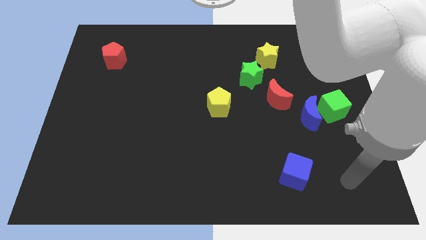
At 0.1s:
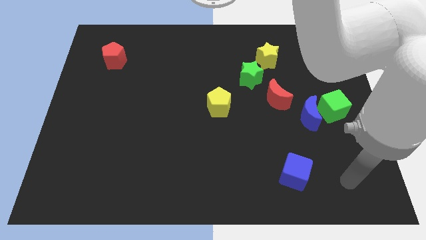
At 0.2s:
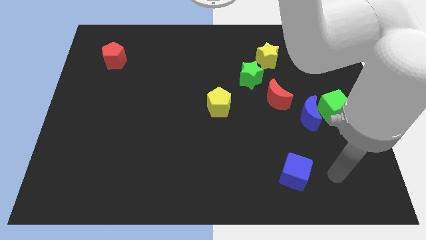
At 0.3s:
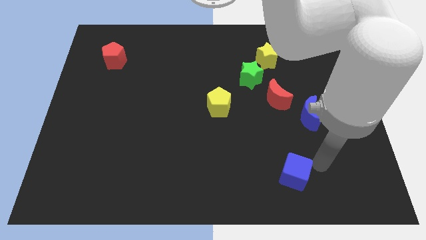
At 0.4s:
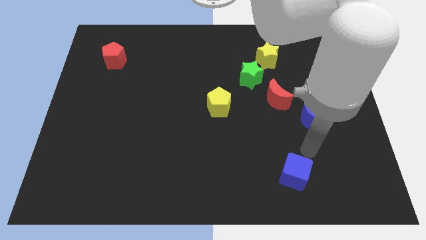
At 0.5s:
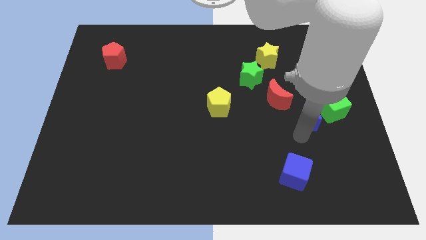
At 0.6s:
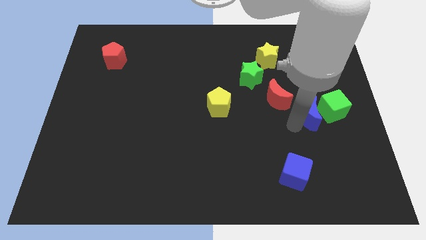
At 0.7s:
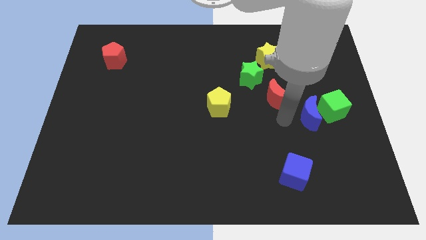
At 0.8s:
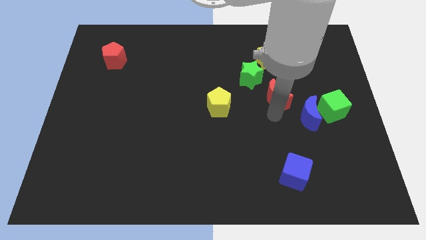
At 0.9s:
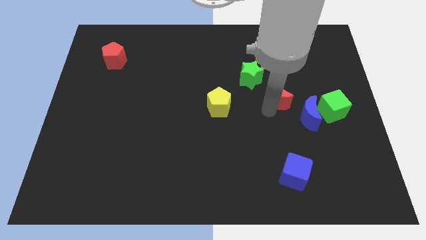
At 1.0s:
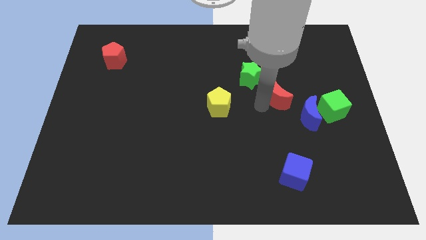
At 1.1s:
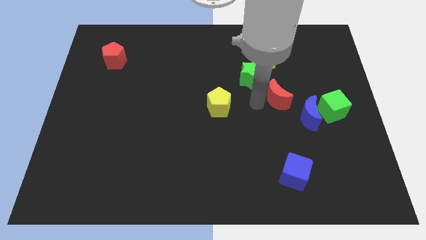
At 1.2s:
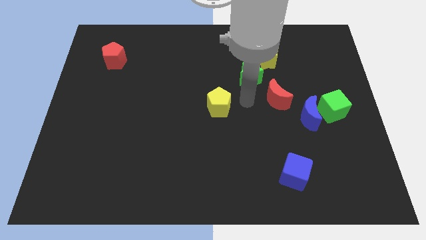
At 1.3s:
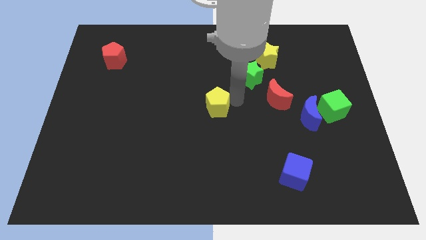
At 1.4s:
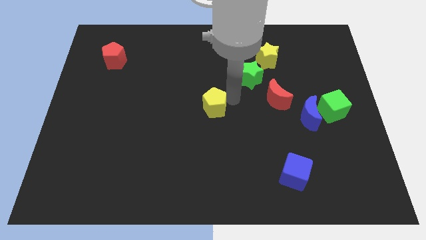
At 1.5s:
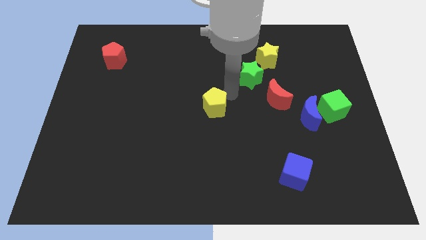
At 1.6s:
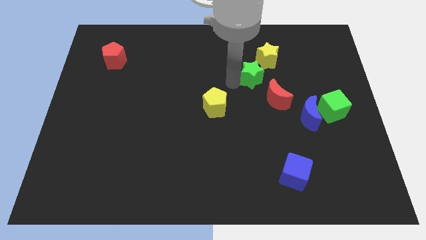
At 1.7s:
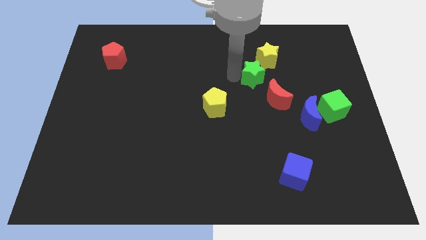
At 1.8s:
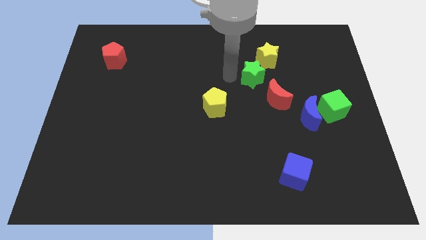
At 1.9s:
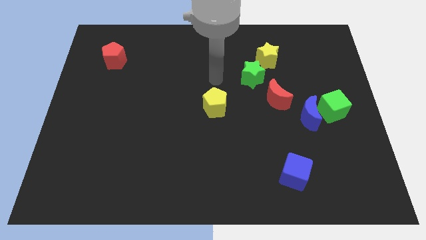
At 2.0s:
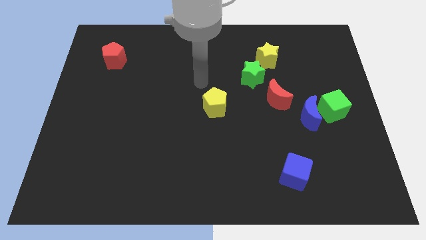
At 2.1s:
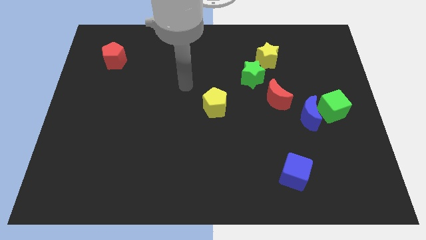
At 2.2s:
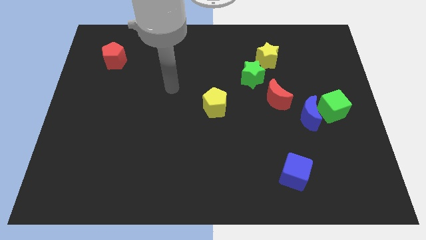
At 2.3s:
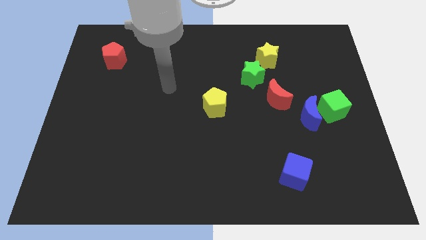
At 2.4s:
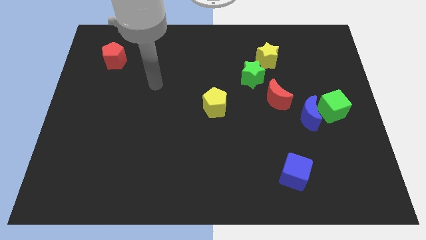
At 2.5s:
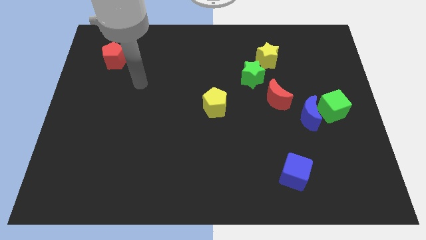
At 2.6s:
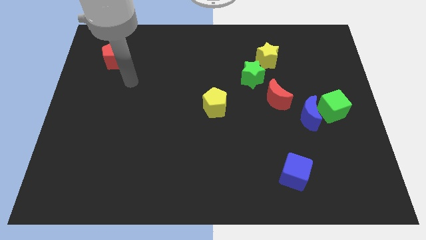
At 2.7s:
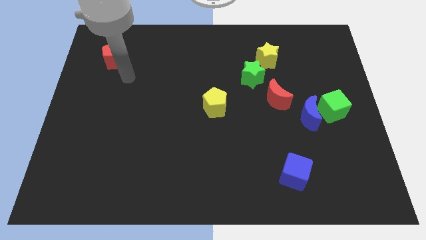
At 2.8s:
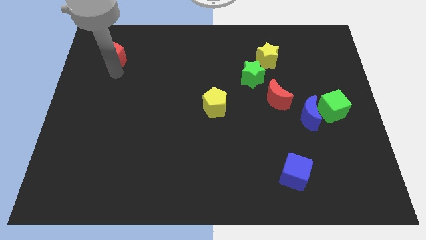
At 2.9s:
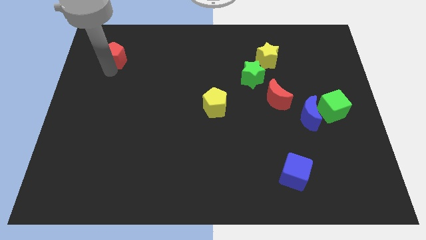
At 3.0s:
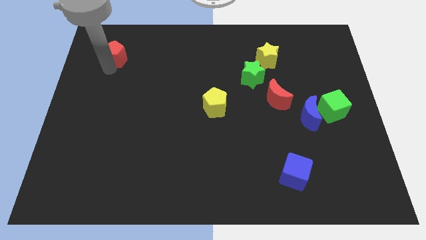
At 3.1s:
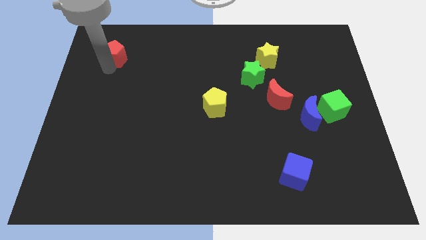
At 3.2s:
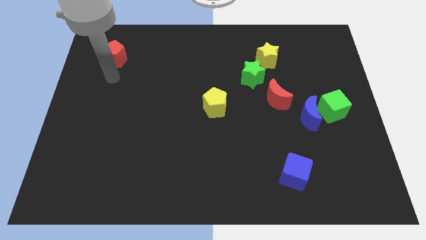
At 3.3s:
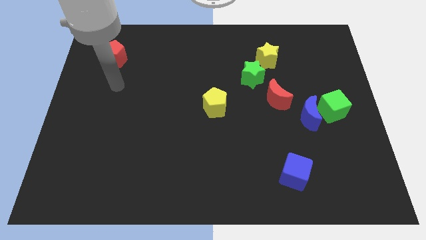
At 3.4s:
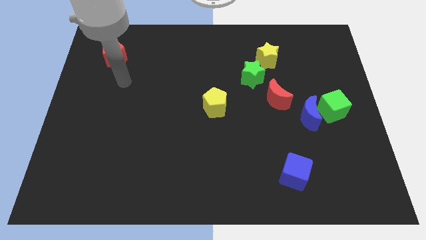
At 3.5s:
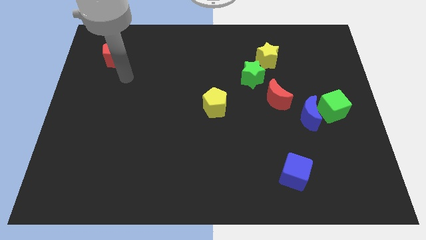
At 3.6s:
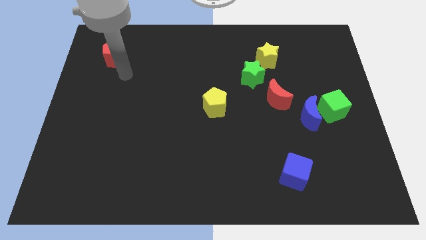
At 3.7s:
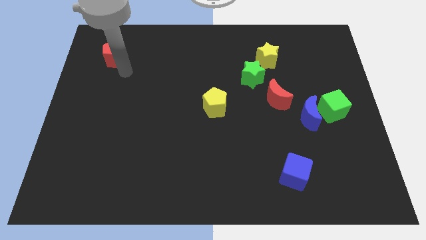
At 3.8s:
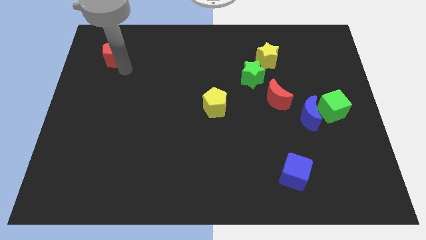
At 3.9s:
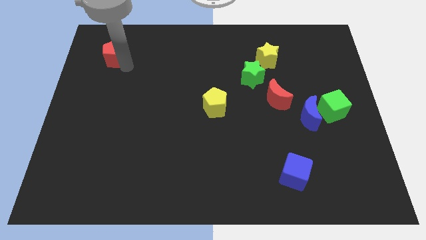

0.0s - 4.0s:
slightly move the red pentagon towards top left

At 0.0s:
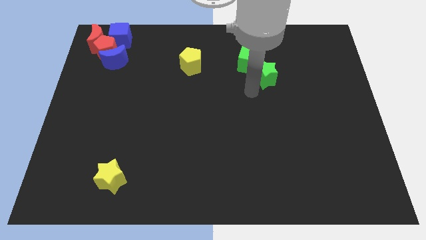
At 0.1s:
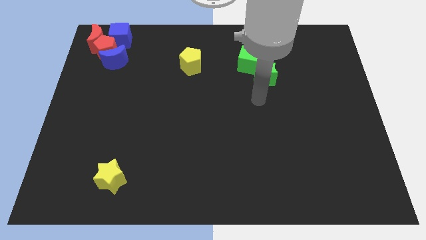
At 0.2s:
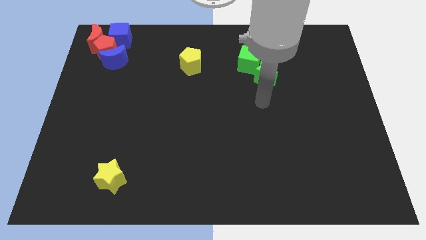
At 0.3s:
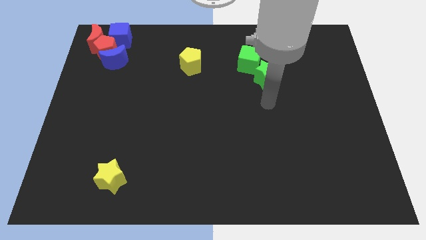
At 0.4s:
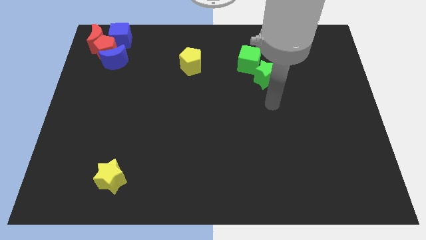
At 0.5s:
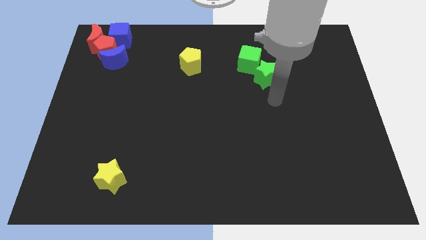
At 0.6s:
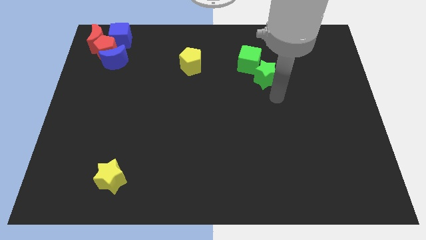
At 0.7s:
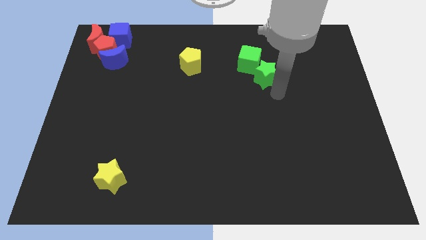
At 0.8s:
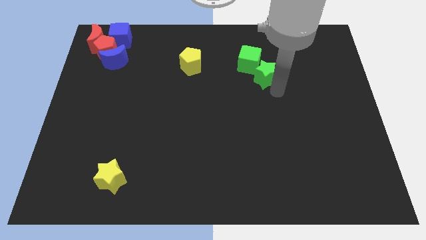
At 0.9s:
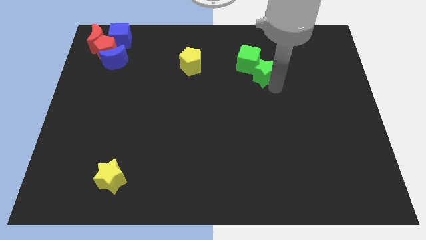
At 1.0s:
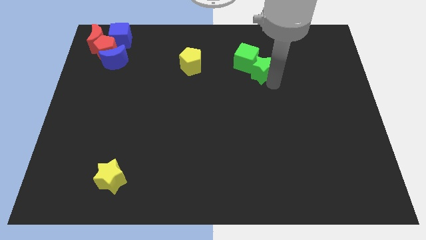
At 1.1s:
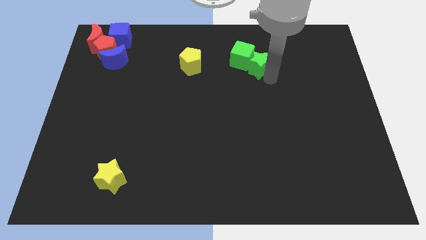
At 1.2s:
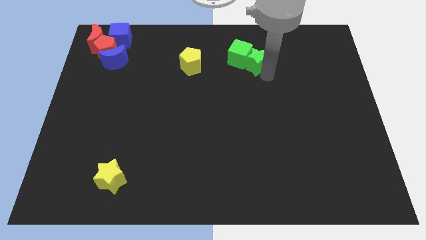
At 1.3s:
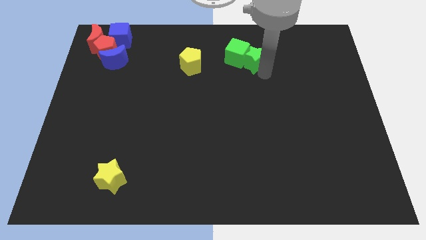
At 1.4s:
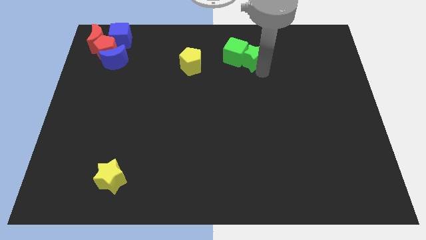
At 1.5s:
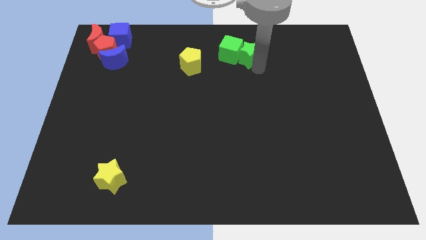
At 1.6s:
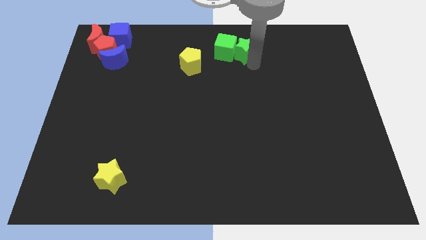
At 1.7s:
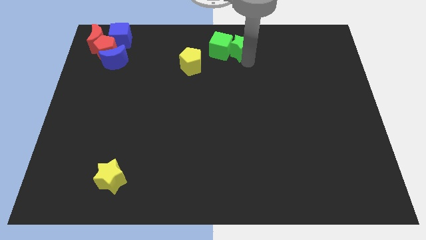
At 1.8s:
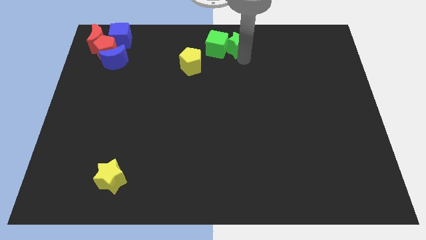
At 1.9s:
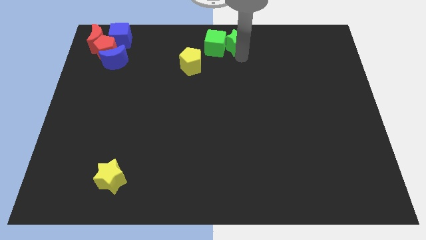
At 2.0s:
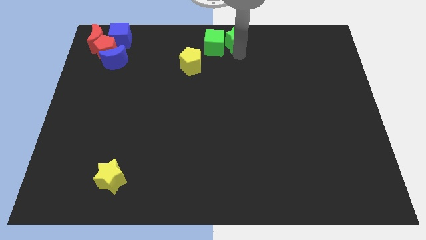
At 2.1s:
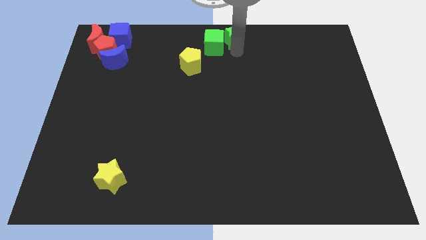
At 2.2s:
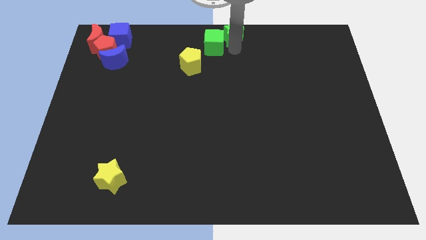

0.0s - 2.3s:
move green cube and green star in to the center

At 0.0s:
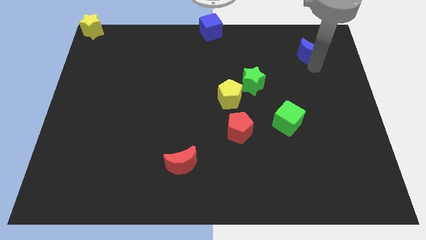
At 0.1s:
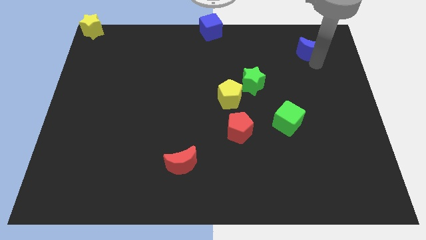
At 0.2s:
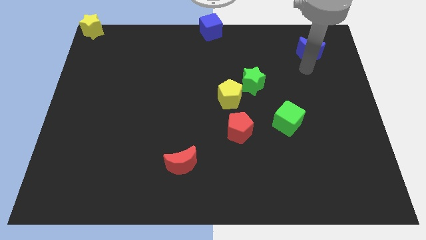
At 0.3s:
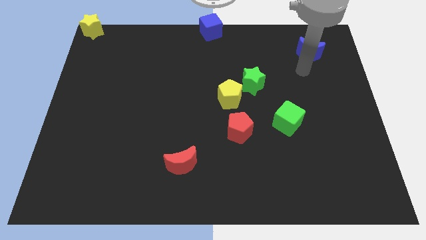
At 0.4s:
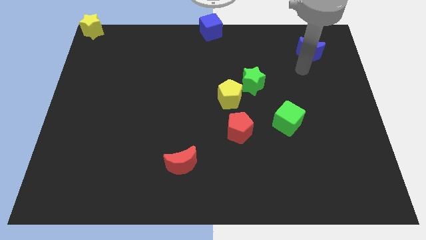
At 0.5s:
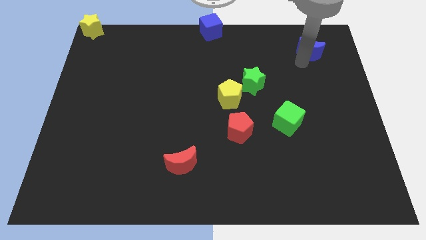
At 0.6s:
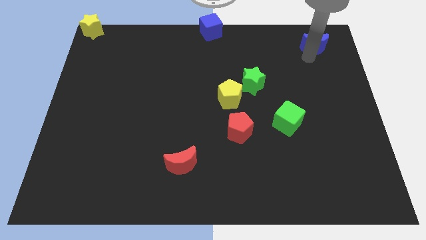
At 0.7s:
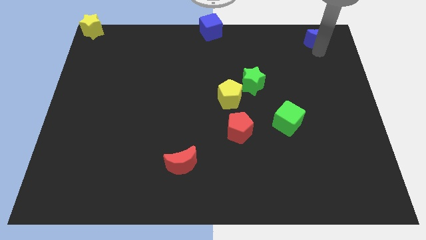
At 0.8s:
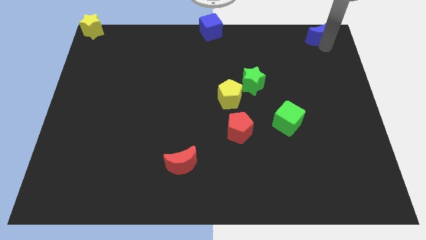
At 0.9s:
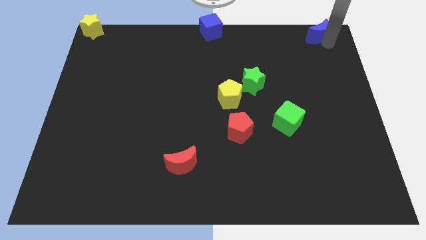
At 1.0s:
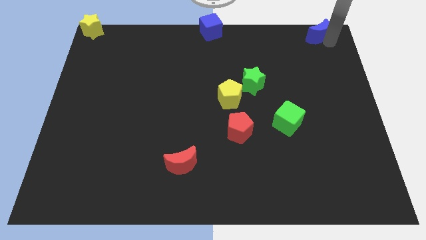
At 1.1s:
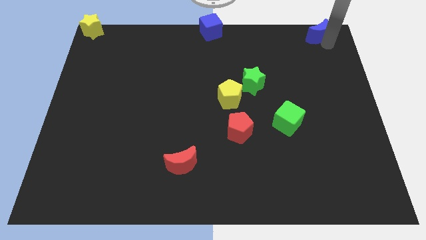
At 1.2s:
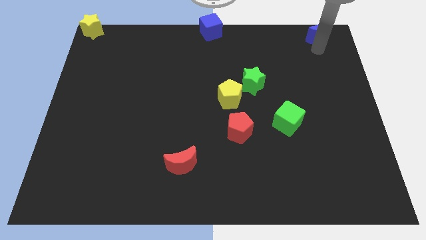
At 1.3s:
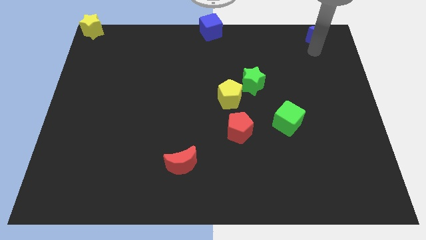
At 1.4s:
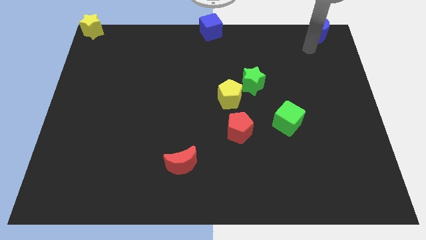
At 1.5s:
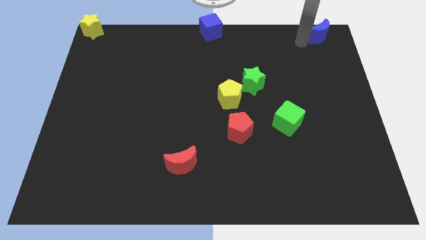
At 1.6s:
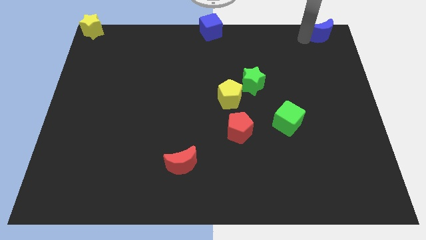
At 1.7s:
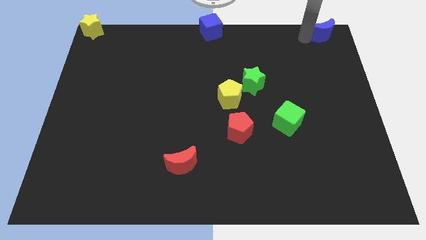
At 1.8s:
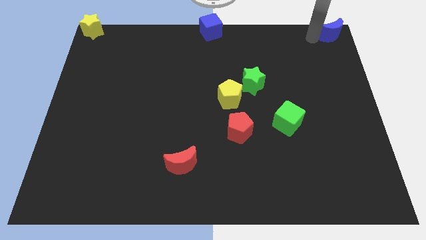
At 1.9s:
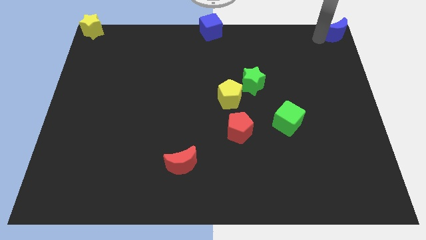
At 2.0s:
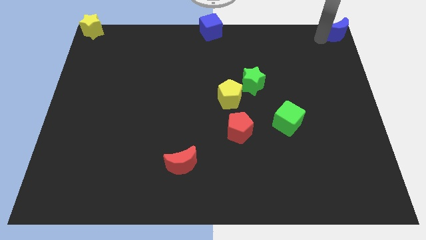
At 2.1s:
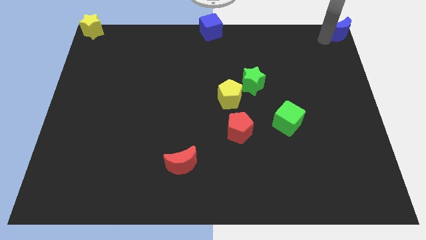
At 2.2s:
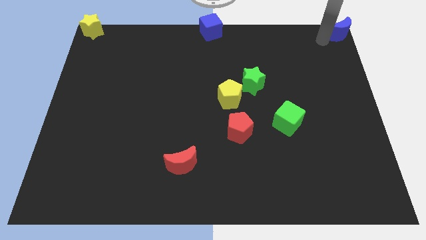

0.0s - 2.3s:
place the blue crescent at top right corner of the board

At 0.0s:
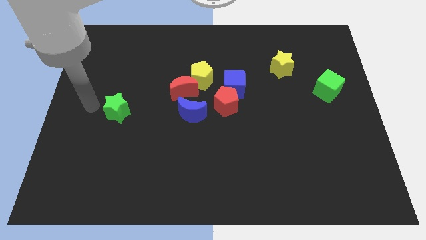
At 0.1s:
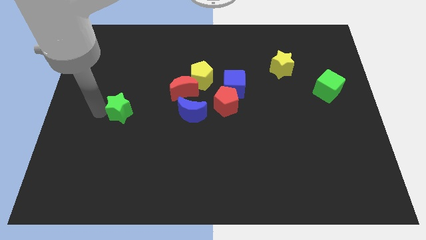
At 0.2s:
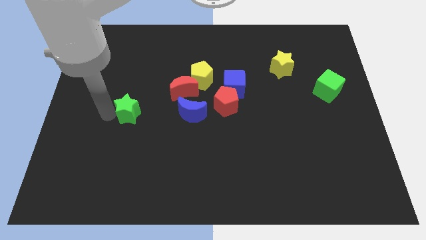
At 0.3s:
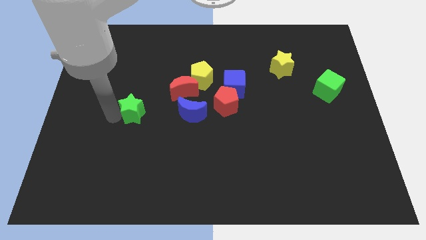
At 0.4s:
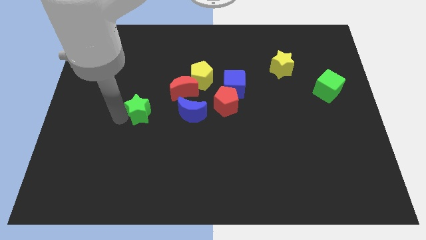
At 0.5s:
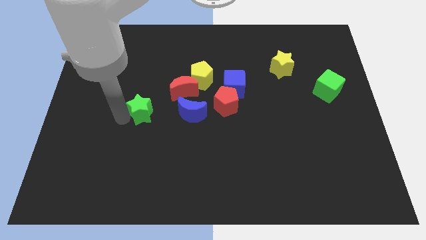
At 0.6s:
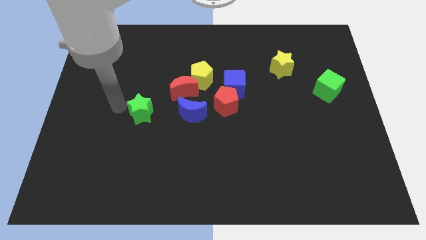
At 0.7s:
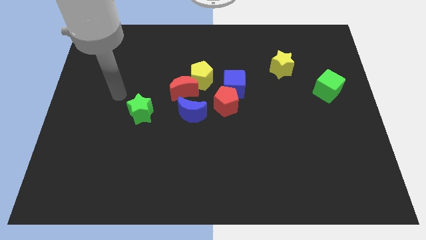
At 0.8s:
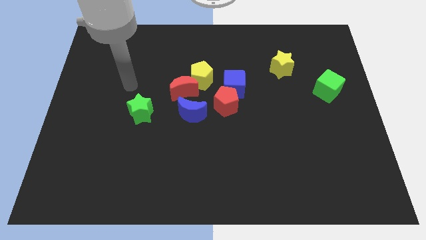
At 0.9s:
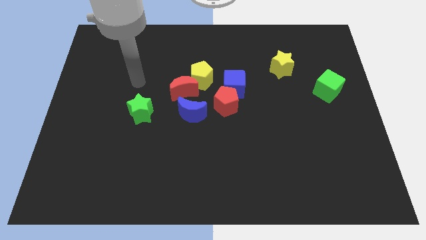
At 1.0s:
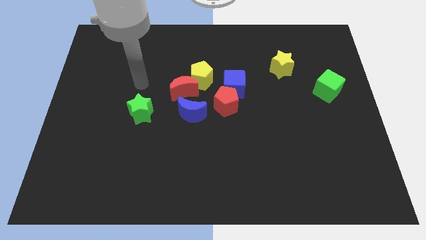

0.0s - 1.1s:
push the green star slightly to the right
